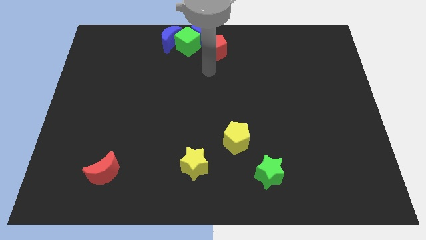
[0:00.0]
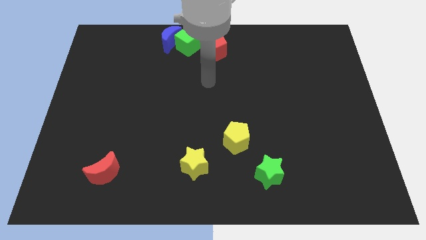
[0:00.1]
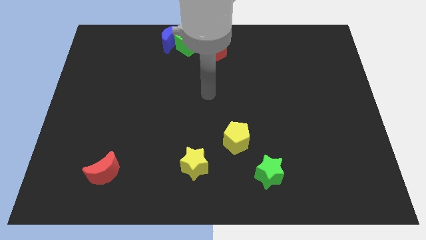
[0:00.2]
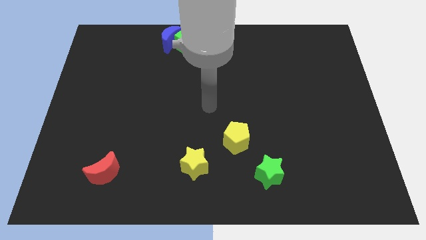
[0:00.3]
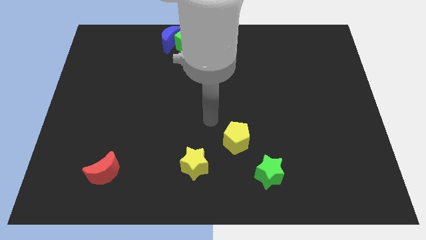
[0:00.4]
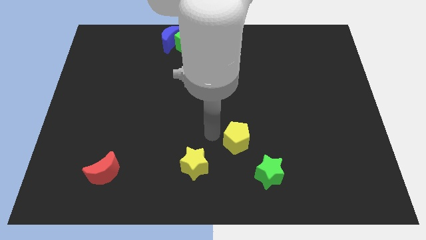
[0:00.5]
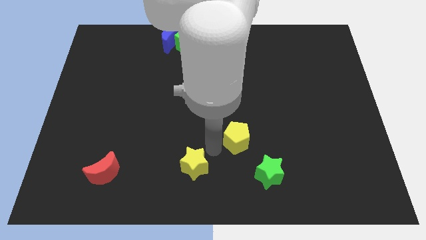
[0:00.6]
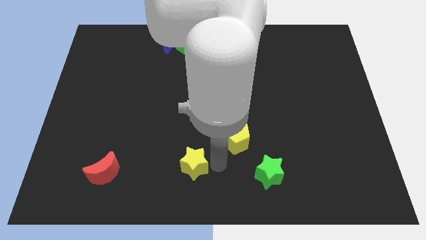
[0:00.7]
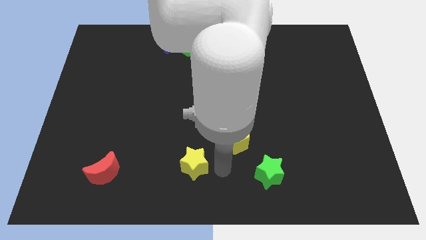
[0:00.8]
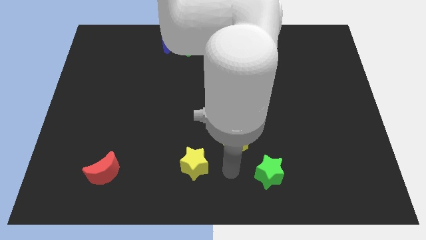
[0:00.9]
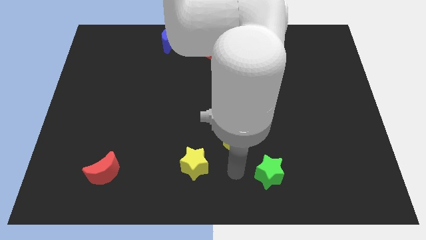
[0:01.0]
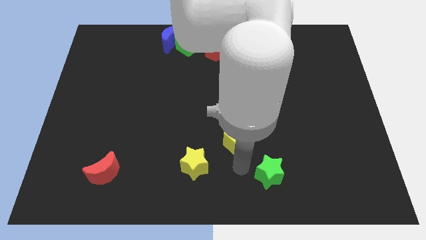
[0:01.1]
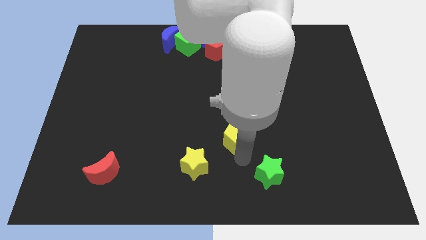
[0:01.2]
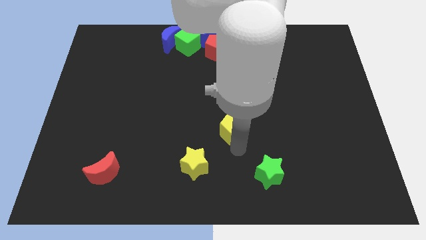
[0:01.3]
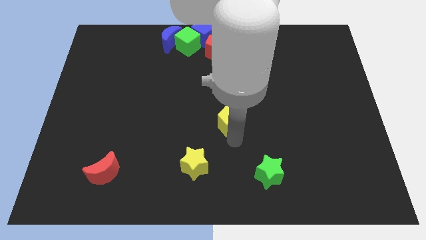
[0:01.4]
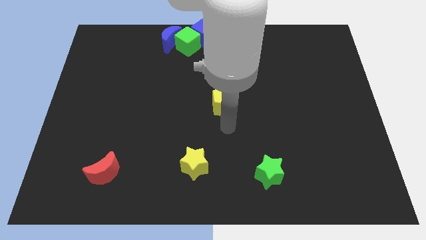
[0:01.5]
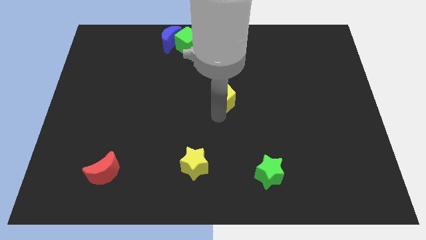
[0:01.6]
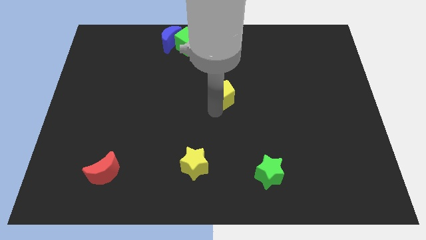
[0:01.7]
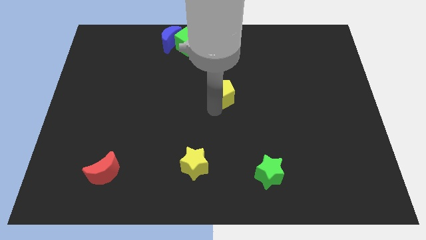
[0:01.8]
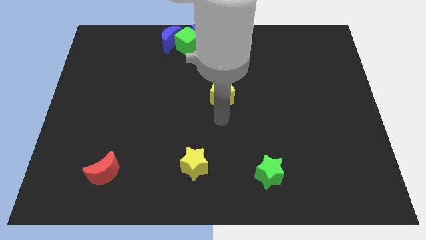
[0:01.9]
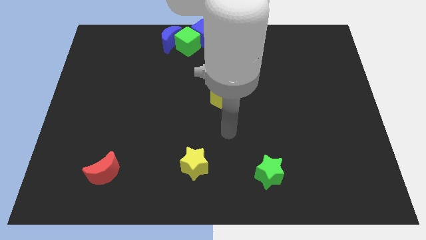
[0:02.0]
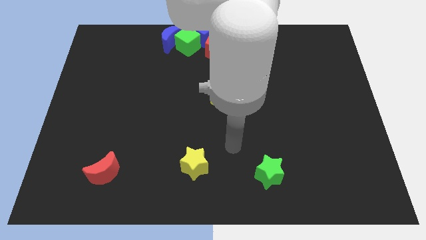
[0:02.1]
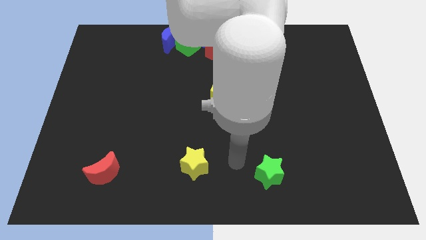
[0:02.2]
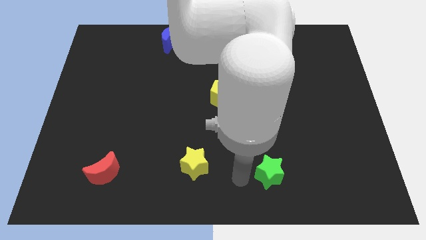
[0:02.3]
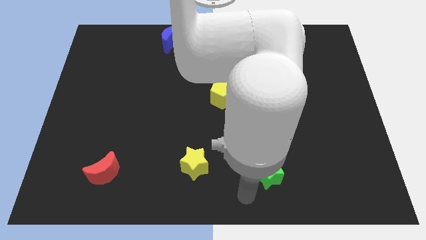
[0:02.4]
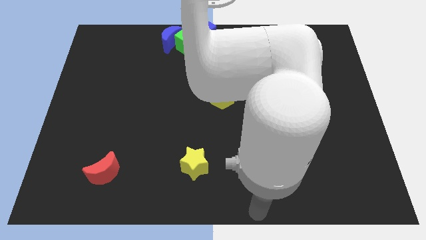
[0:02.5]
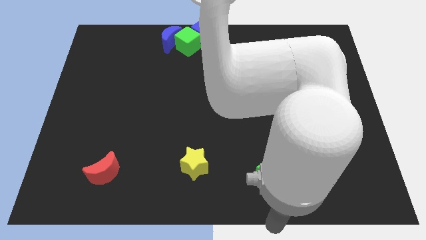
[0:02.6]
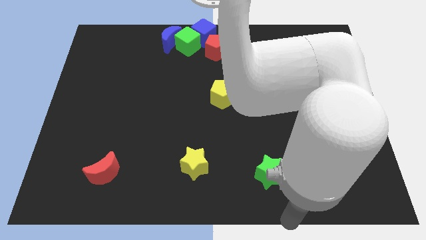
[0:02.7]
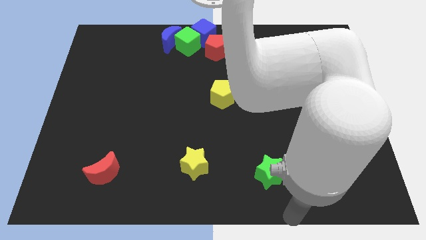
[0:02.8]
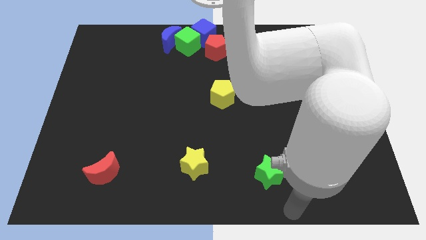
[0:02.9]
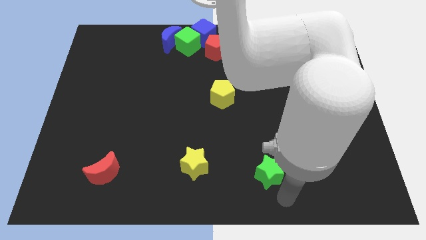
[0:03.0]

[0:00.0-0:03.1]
move the yellow pentagon to the bottom side of the red pentagon

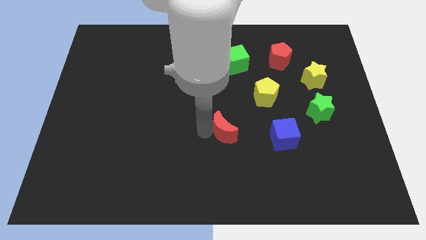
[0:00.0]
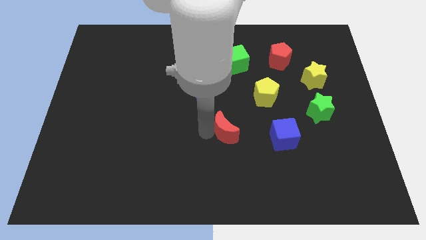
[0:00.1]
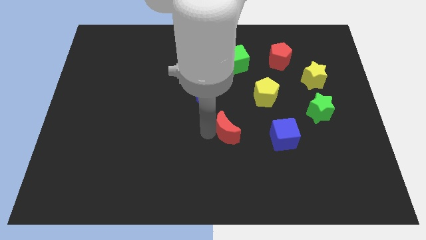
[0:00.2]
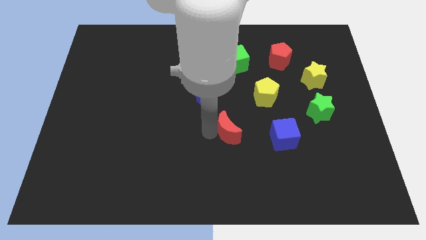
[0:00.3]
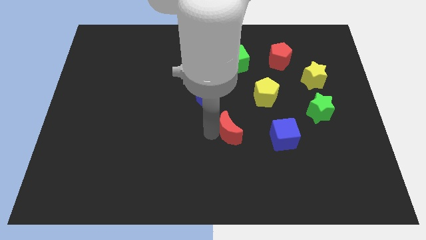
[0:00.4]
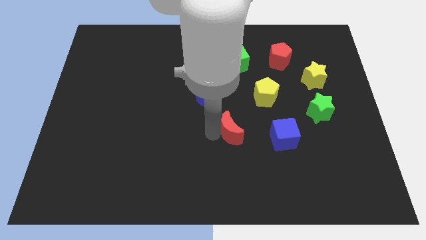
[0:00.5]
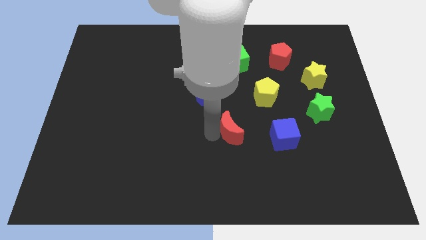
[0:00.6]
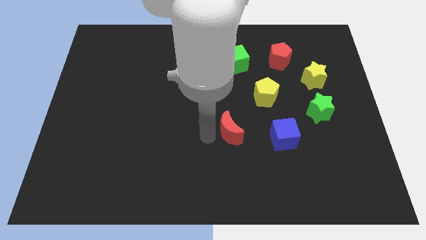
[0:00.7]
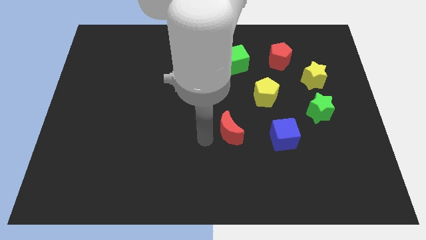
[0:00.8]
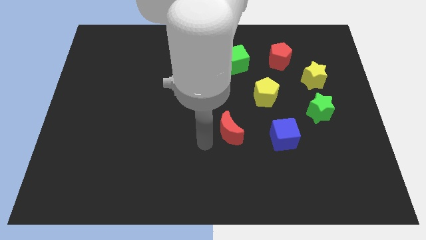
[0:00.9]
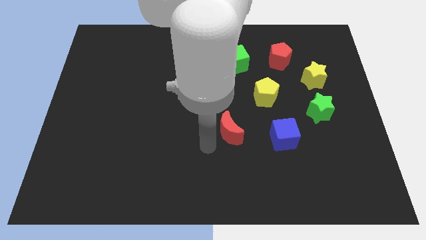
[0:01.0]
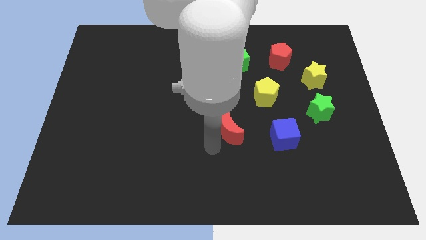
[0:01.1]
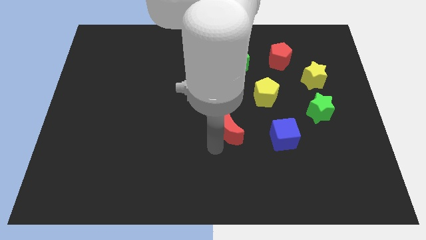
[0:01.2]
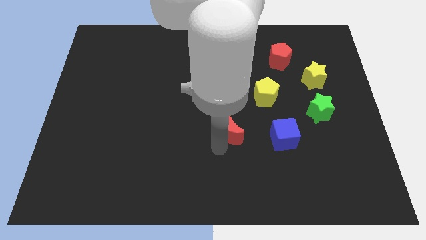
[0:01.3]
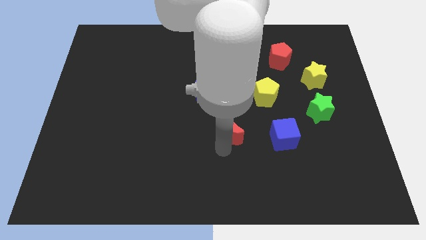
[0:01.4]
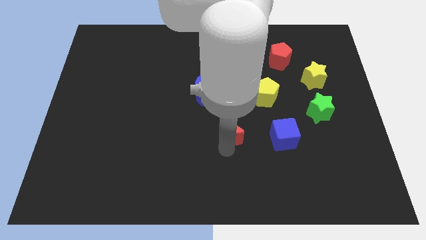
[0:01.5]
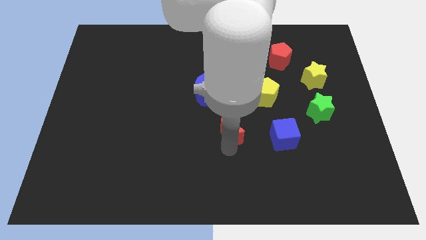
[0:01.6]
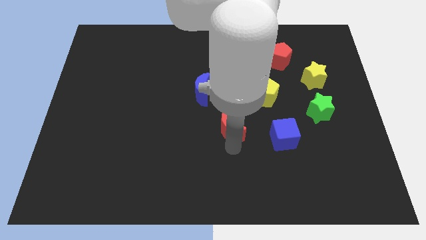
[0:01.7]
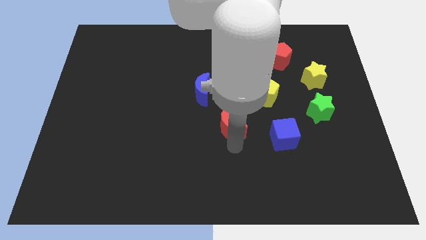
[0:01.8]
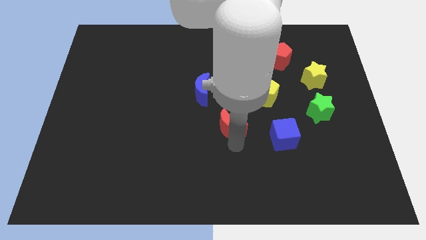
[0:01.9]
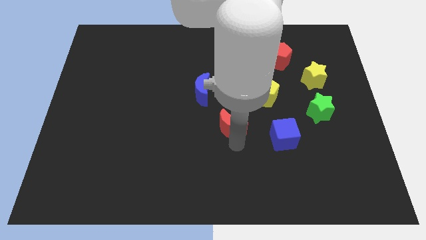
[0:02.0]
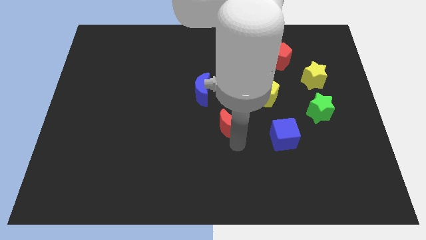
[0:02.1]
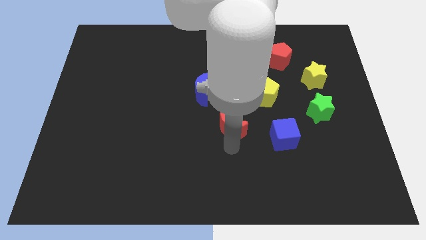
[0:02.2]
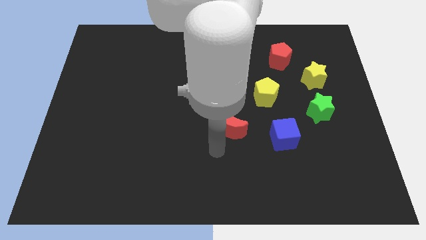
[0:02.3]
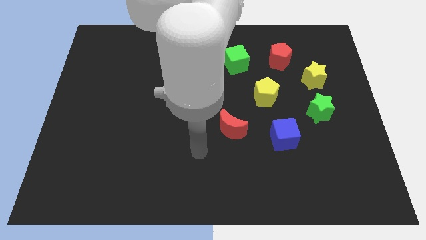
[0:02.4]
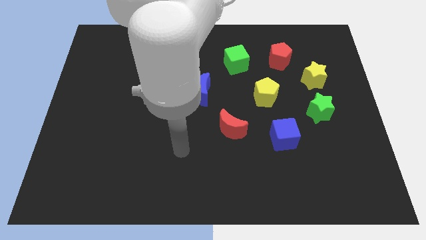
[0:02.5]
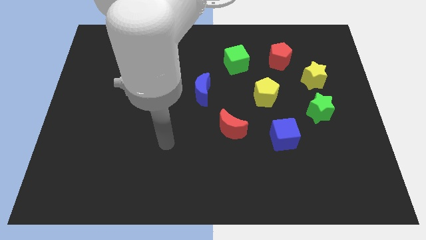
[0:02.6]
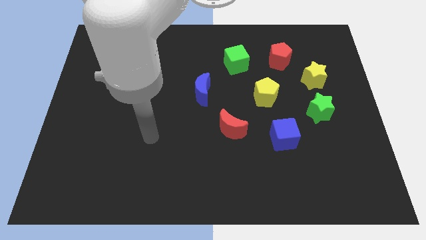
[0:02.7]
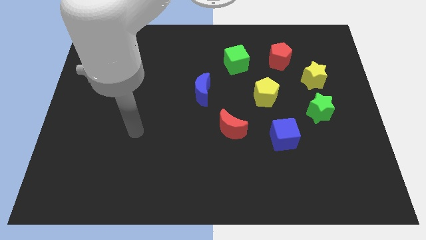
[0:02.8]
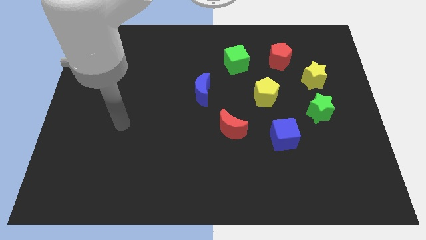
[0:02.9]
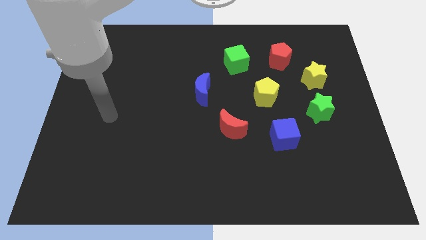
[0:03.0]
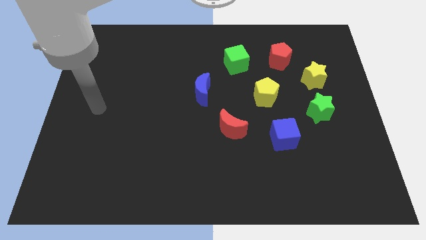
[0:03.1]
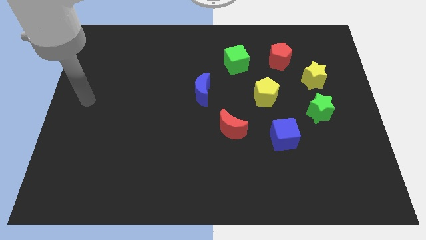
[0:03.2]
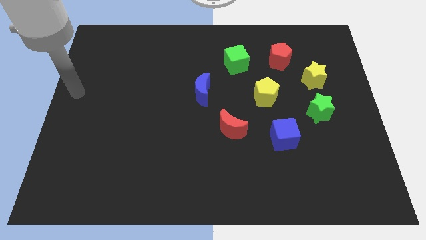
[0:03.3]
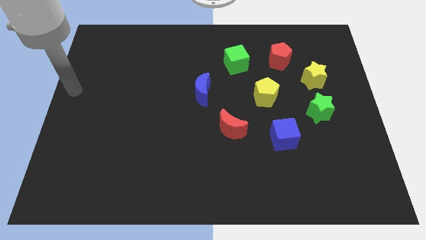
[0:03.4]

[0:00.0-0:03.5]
move your arm away from the red moon

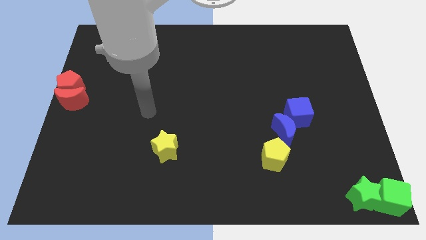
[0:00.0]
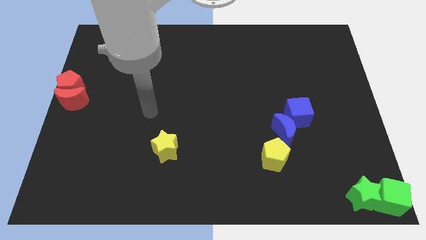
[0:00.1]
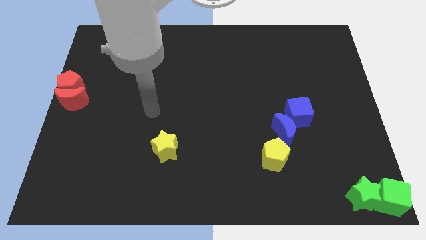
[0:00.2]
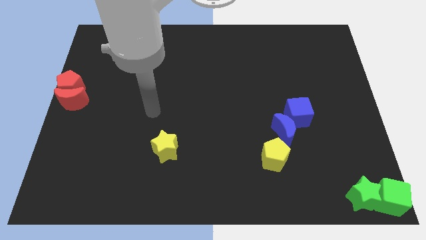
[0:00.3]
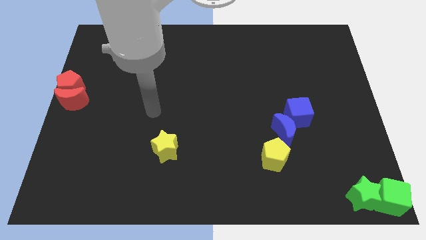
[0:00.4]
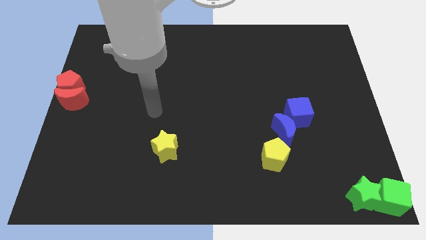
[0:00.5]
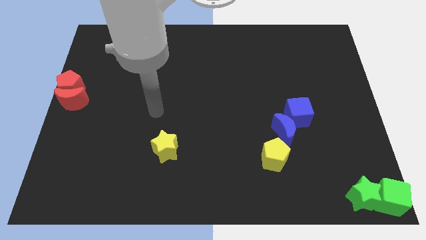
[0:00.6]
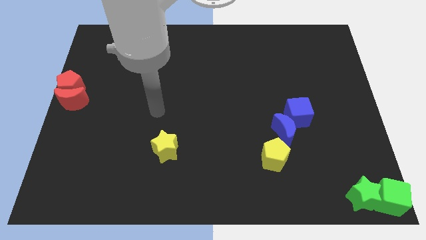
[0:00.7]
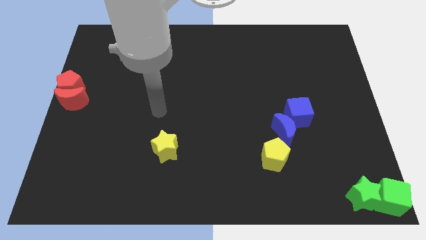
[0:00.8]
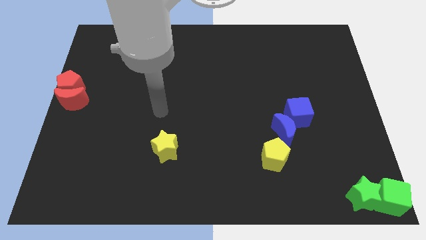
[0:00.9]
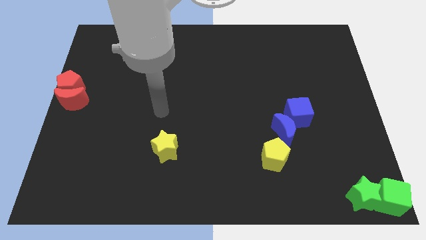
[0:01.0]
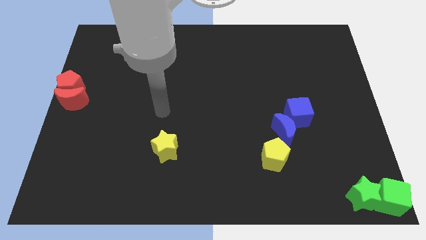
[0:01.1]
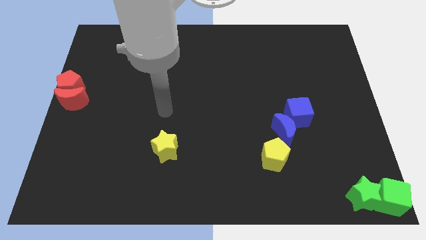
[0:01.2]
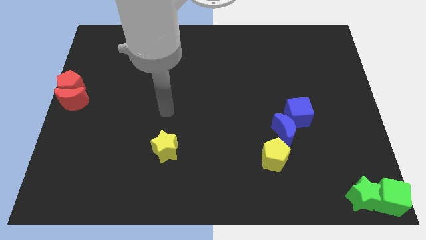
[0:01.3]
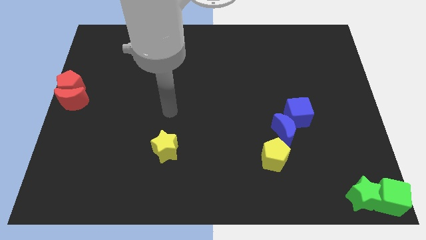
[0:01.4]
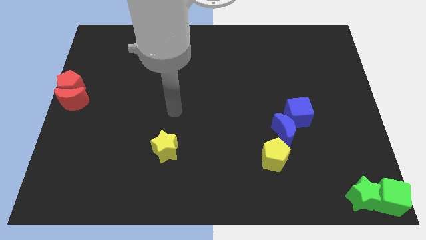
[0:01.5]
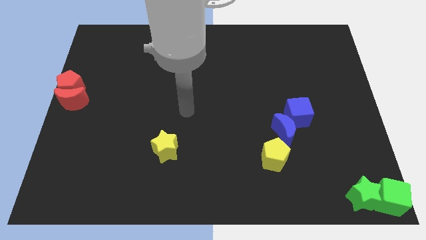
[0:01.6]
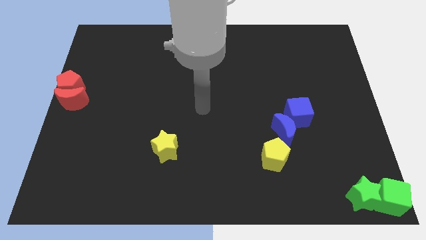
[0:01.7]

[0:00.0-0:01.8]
move your hand to the center of the board

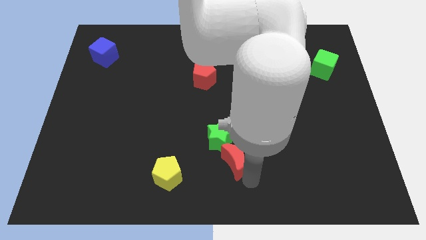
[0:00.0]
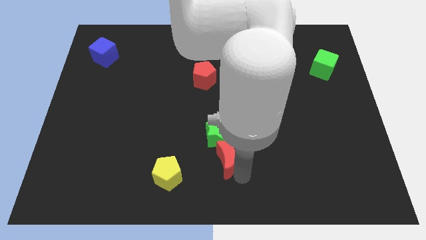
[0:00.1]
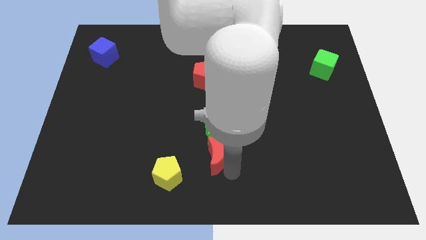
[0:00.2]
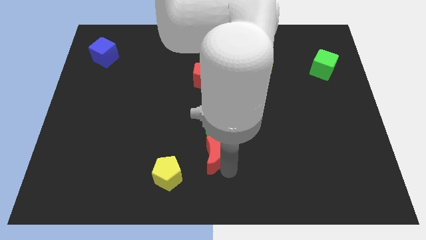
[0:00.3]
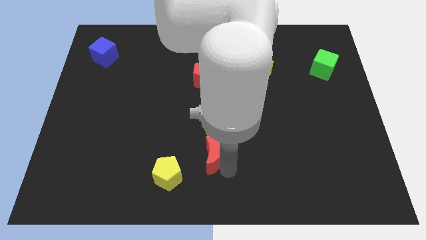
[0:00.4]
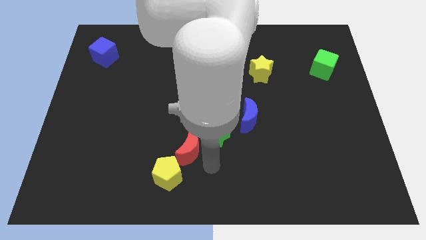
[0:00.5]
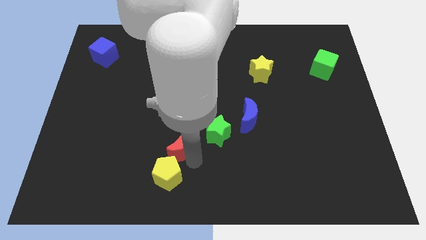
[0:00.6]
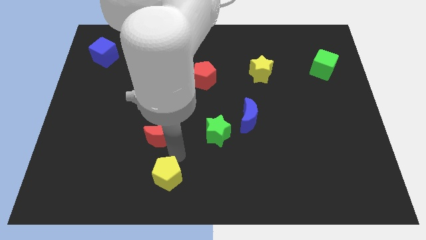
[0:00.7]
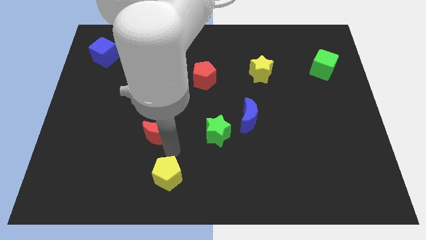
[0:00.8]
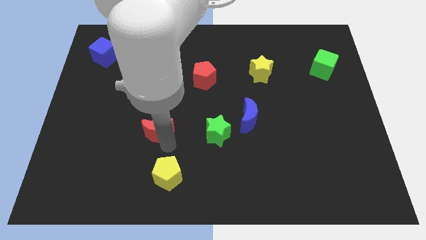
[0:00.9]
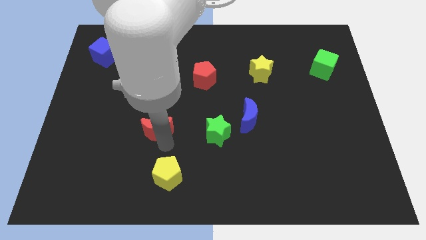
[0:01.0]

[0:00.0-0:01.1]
move red moon away from the green star
